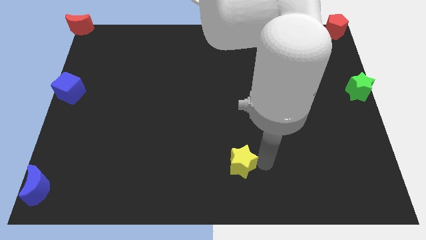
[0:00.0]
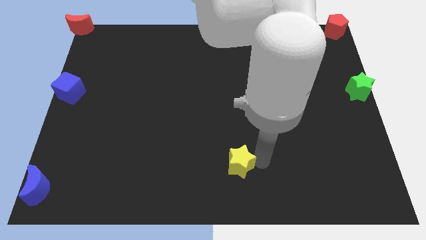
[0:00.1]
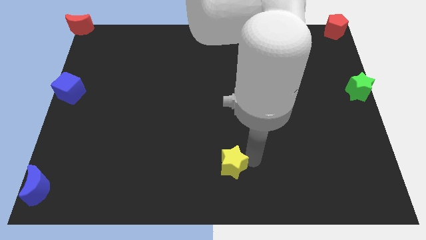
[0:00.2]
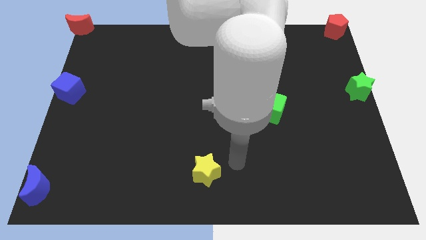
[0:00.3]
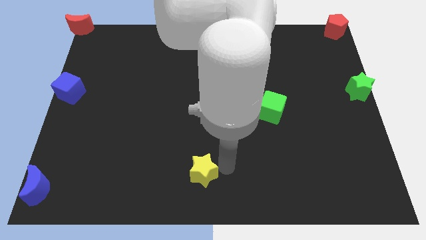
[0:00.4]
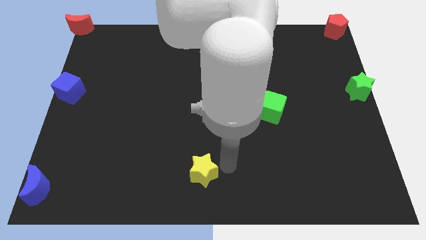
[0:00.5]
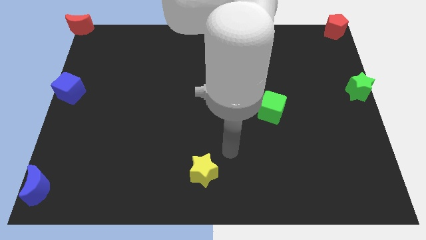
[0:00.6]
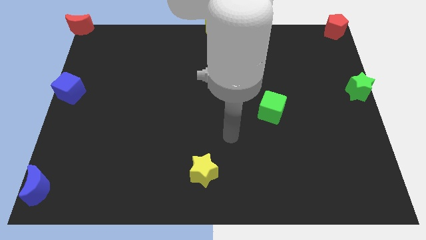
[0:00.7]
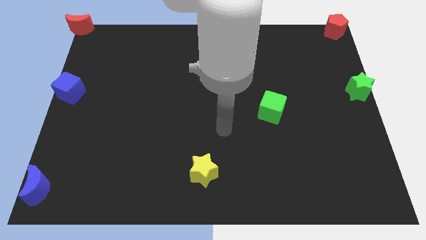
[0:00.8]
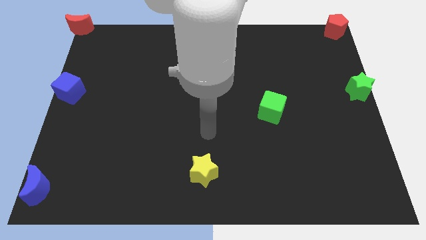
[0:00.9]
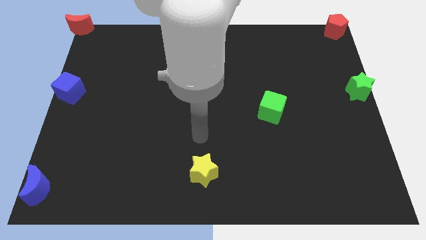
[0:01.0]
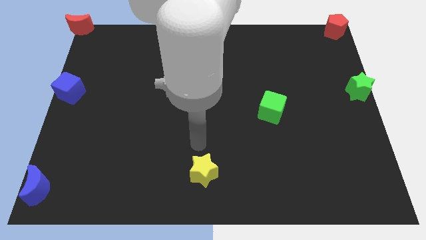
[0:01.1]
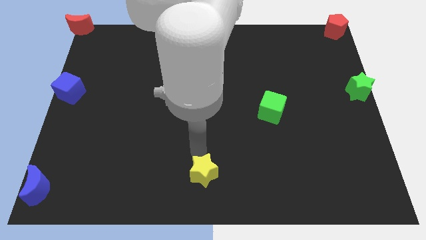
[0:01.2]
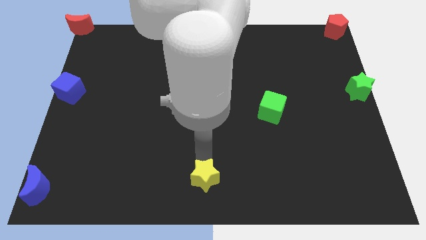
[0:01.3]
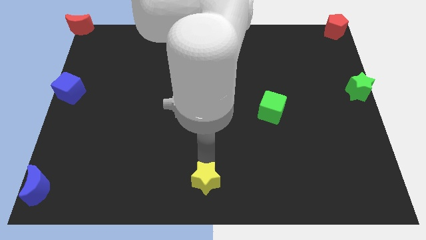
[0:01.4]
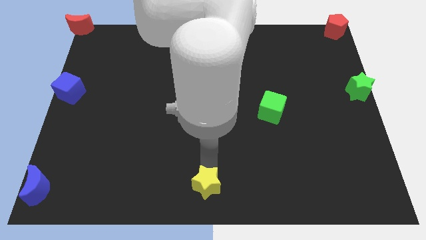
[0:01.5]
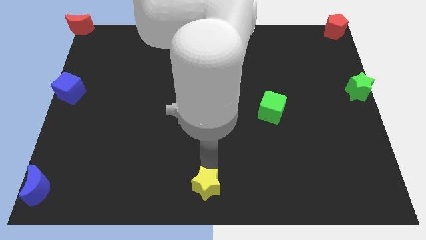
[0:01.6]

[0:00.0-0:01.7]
move the yellow star to the bottom center of the board

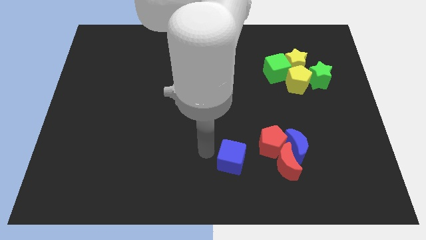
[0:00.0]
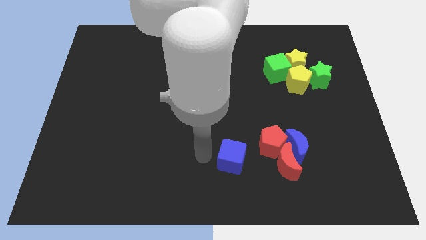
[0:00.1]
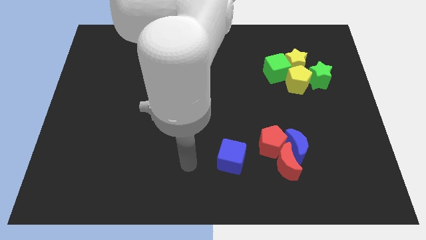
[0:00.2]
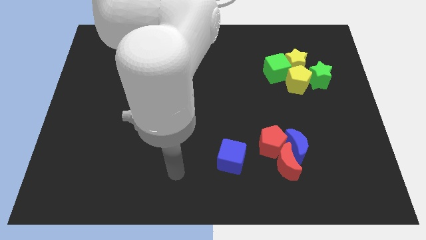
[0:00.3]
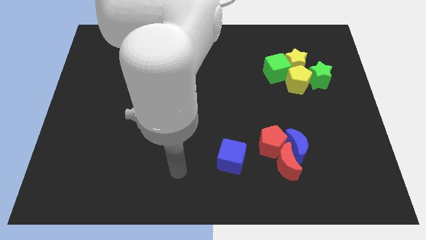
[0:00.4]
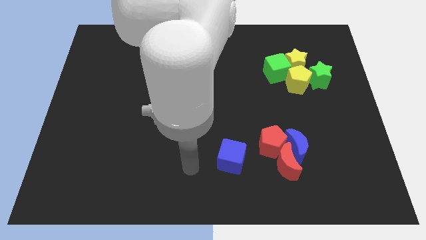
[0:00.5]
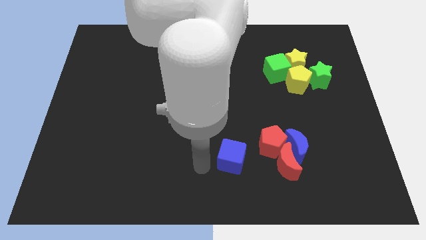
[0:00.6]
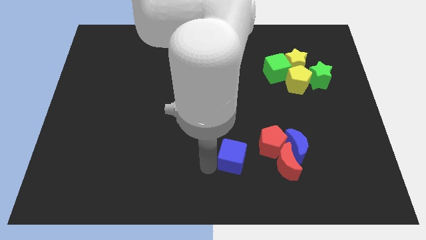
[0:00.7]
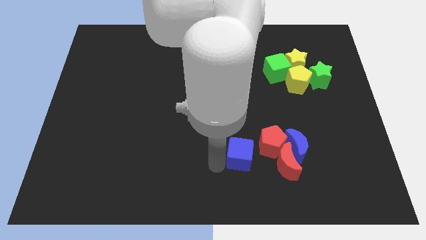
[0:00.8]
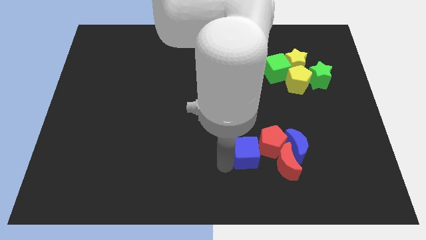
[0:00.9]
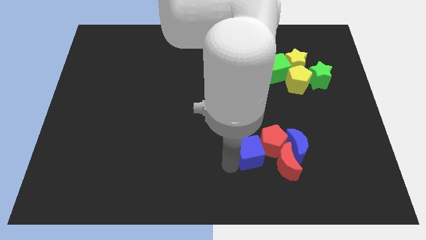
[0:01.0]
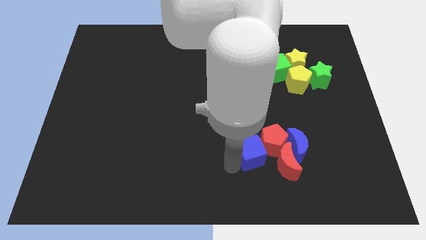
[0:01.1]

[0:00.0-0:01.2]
move the blue cube into the bottom left of the red pentagon

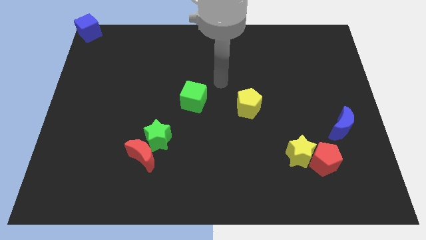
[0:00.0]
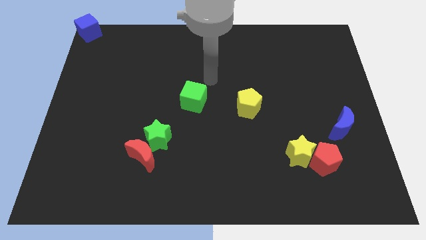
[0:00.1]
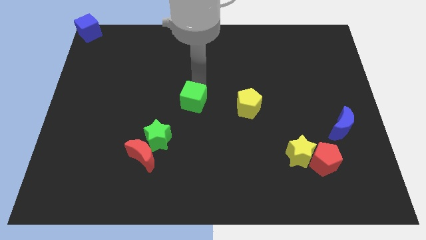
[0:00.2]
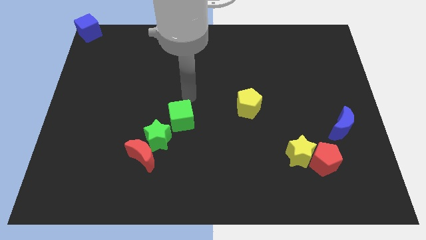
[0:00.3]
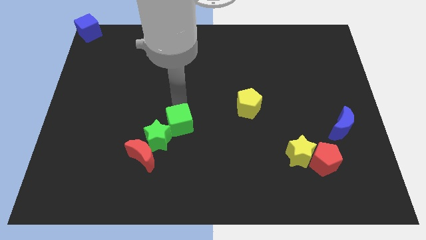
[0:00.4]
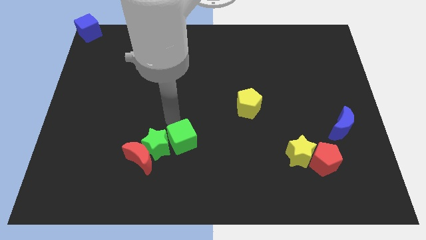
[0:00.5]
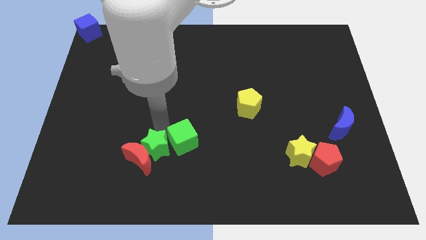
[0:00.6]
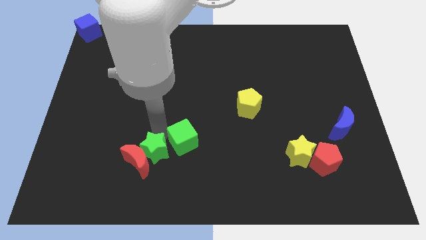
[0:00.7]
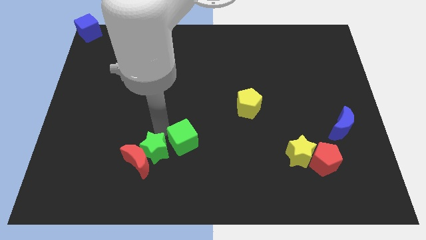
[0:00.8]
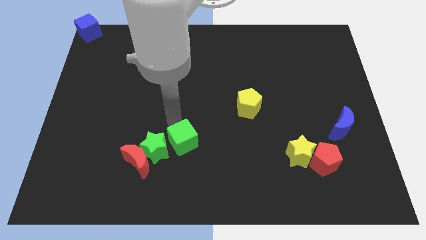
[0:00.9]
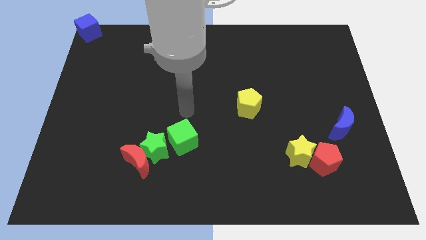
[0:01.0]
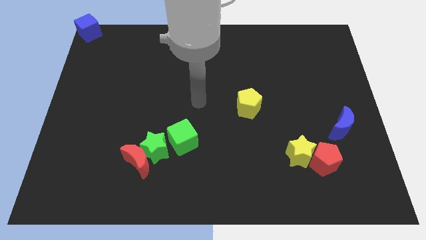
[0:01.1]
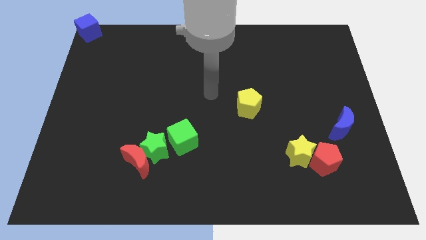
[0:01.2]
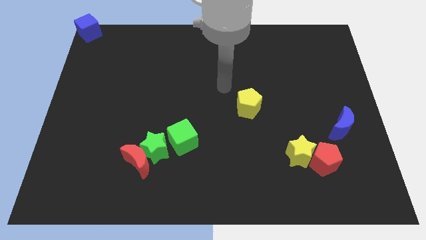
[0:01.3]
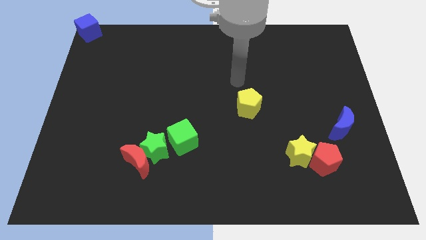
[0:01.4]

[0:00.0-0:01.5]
push the green cube into the green star and red moon

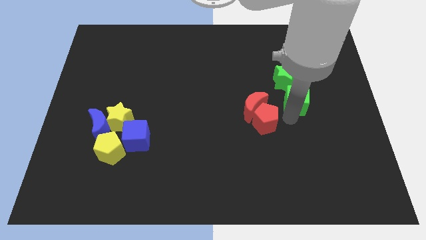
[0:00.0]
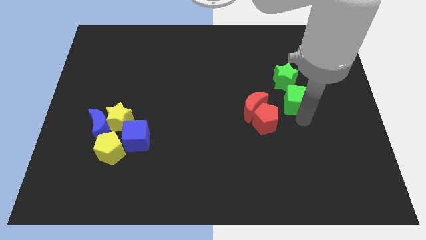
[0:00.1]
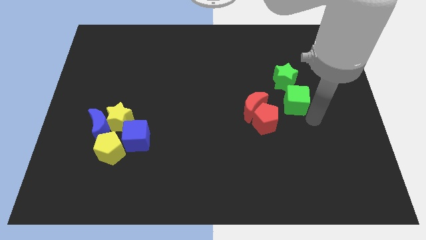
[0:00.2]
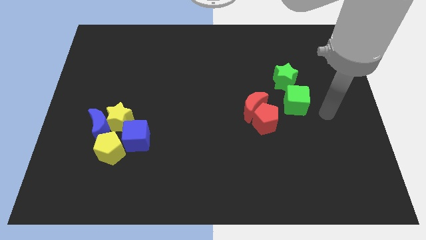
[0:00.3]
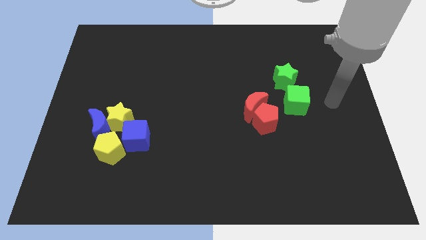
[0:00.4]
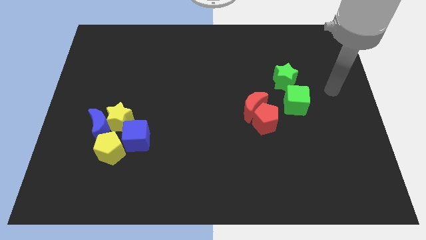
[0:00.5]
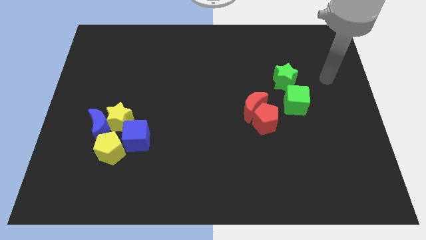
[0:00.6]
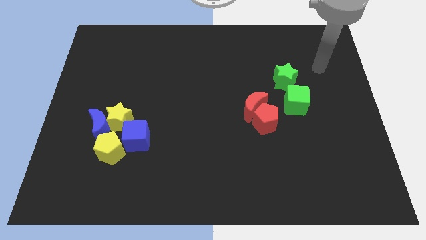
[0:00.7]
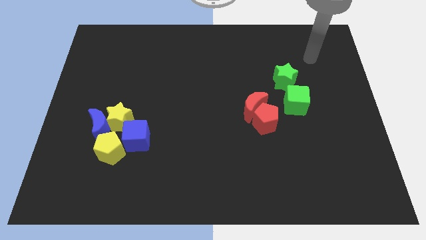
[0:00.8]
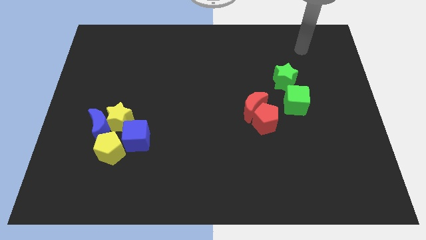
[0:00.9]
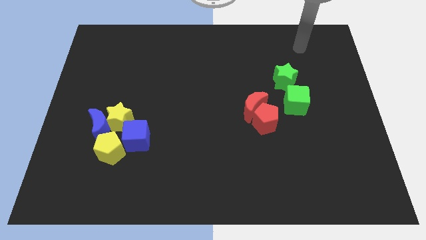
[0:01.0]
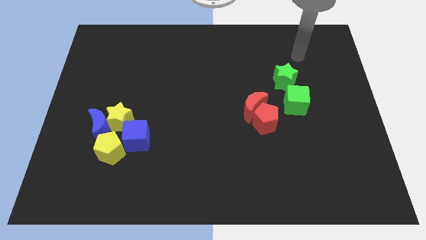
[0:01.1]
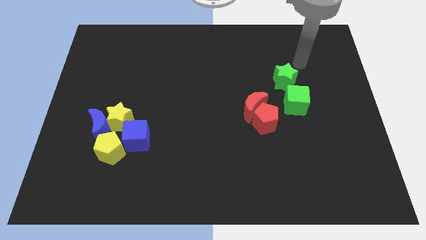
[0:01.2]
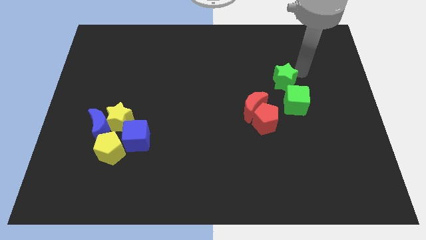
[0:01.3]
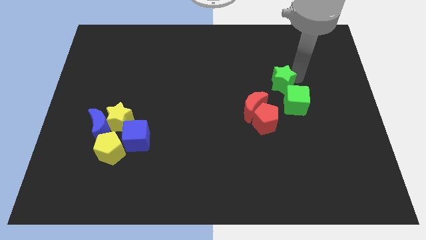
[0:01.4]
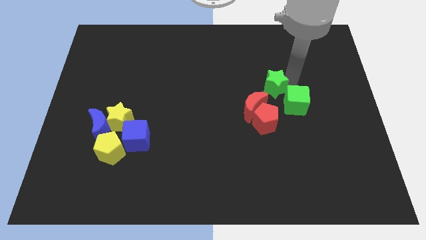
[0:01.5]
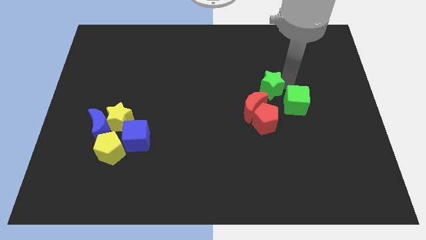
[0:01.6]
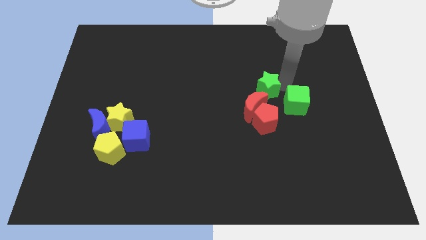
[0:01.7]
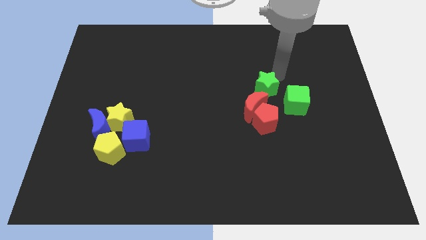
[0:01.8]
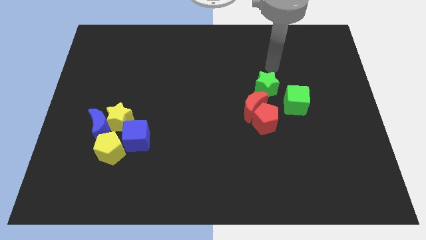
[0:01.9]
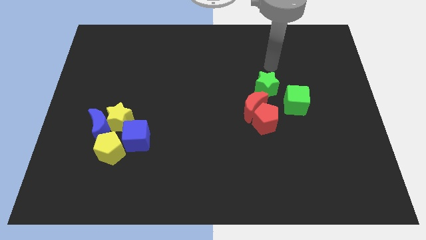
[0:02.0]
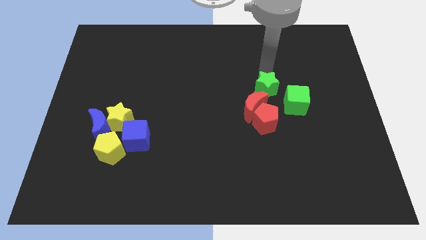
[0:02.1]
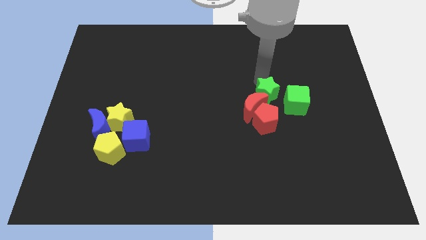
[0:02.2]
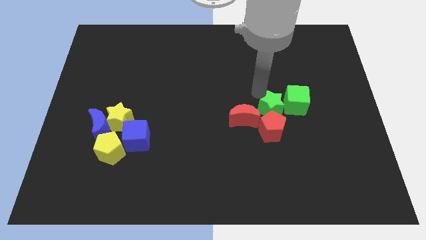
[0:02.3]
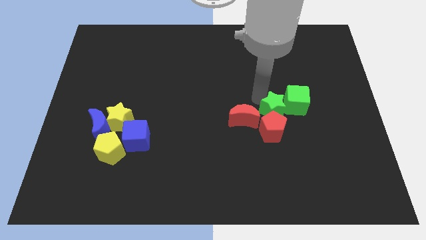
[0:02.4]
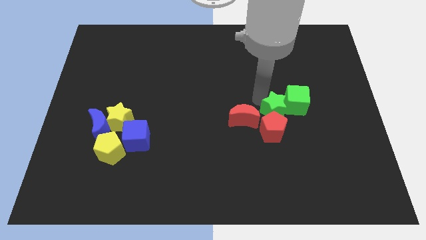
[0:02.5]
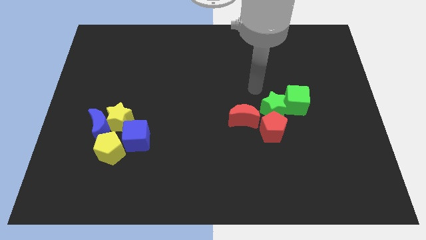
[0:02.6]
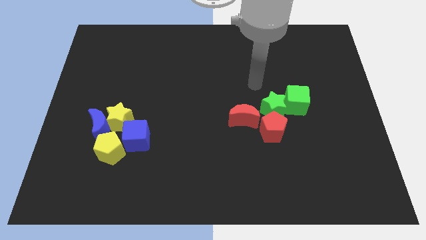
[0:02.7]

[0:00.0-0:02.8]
move the green star to the left of the green cube

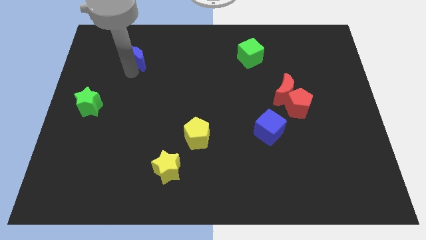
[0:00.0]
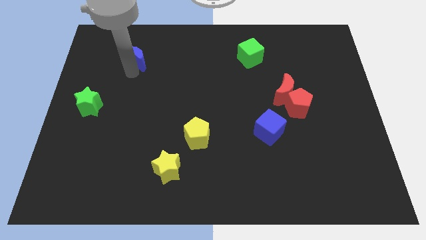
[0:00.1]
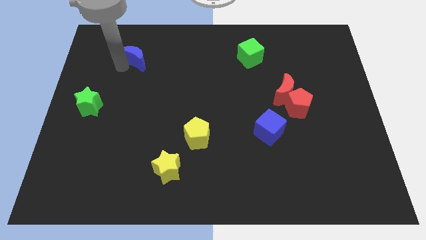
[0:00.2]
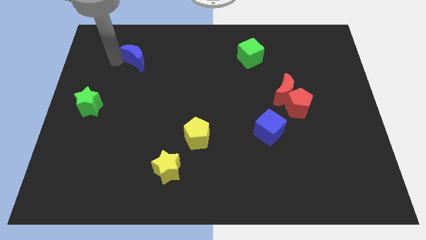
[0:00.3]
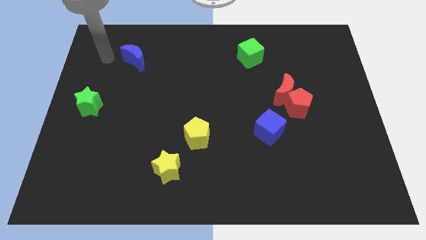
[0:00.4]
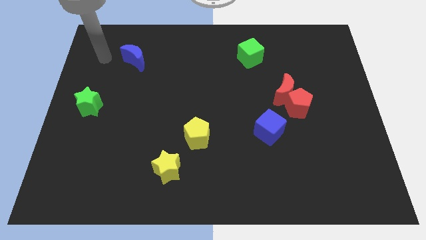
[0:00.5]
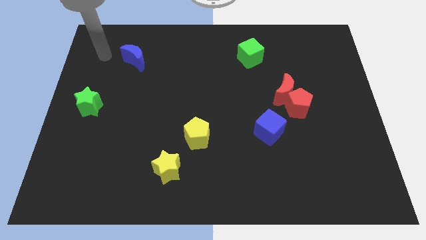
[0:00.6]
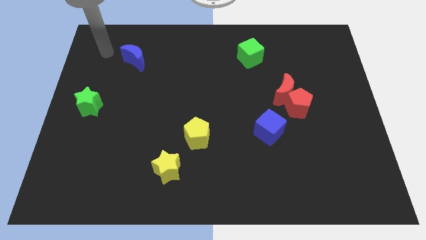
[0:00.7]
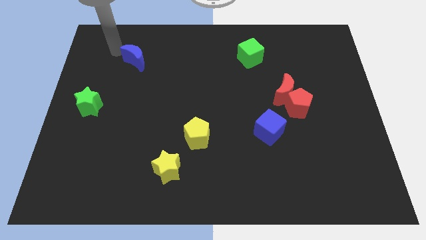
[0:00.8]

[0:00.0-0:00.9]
slide the blue crescent to the left of the blue cube

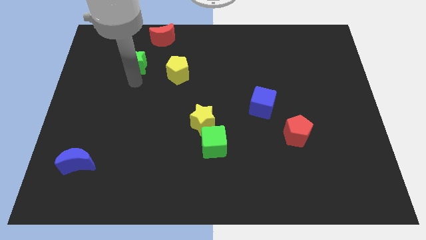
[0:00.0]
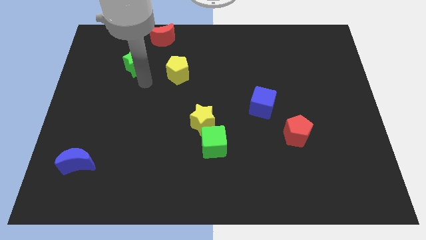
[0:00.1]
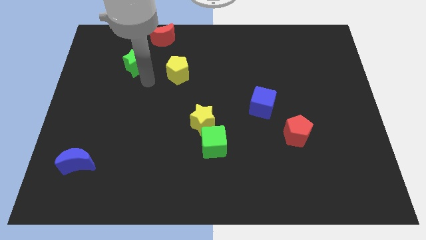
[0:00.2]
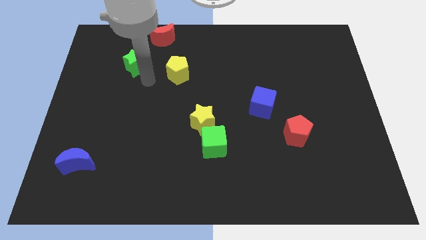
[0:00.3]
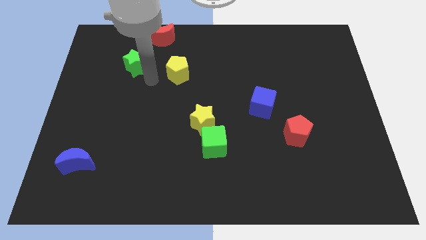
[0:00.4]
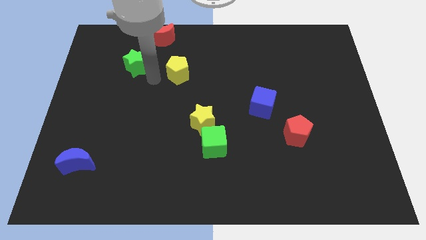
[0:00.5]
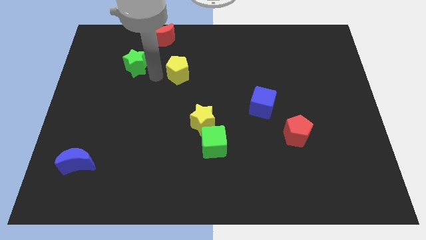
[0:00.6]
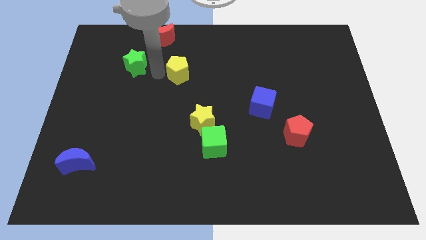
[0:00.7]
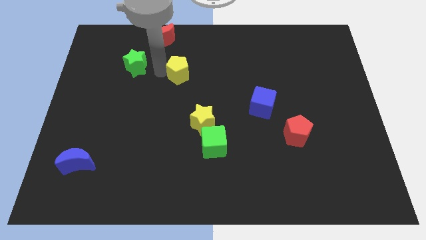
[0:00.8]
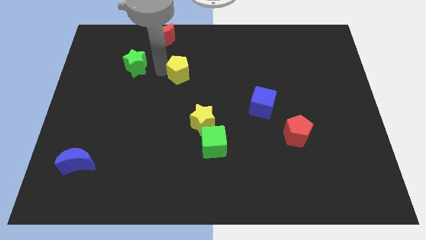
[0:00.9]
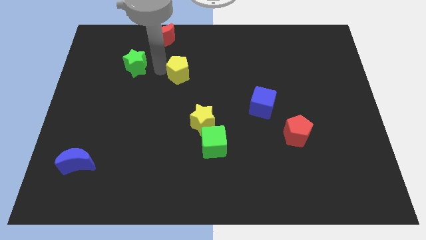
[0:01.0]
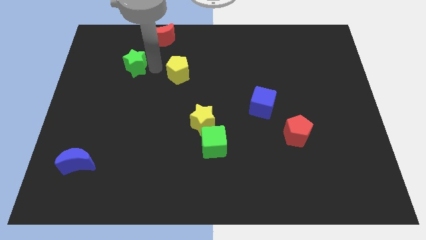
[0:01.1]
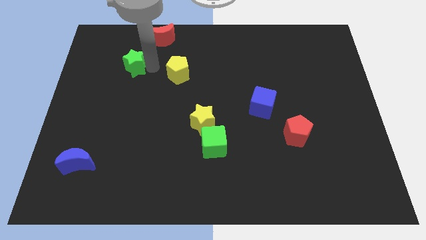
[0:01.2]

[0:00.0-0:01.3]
make a triangle by moving the green star
